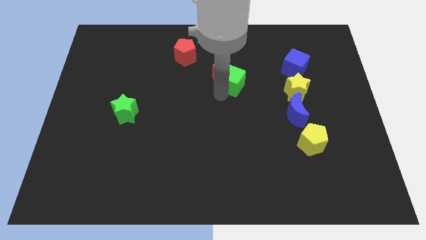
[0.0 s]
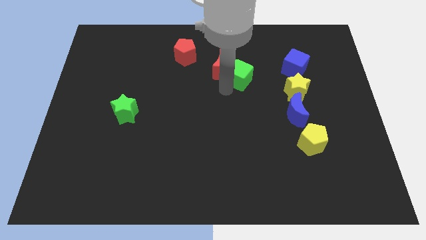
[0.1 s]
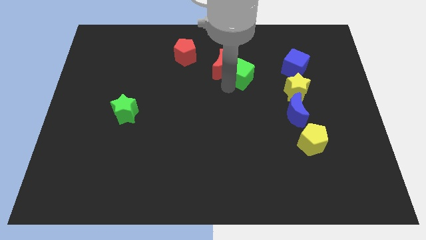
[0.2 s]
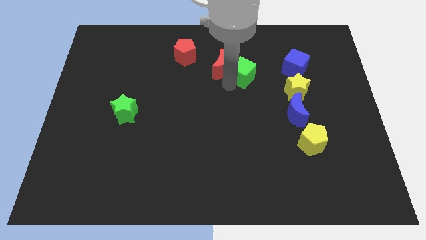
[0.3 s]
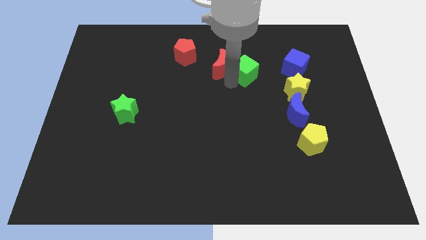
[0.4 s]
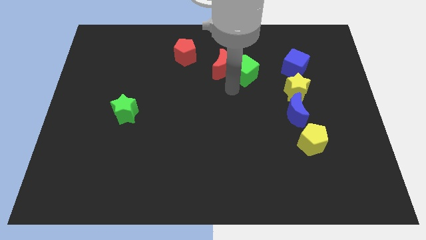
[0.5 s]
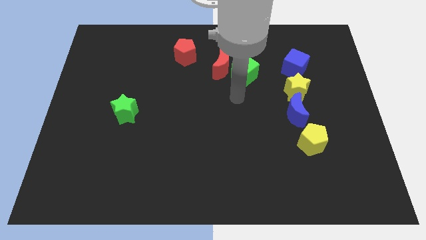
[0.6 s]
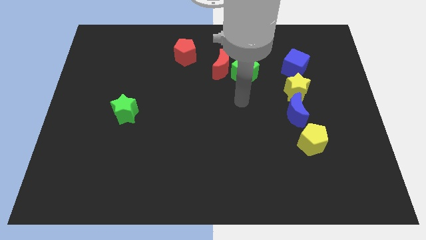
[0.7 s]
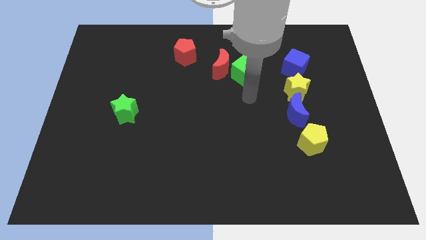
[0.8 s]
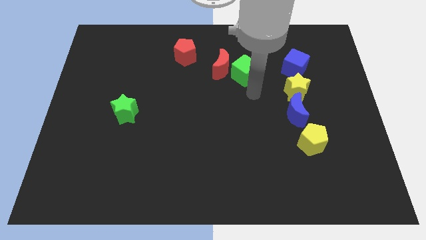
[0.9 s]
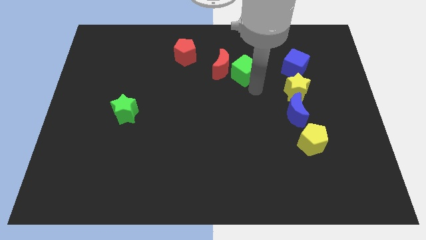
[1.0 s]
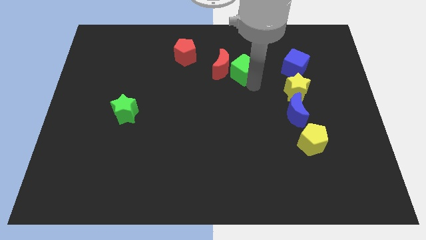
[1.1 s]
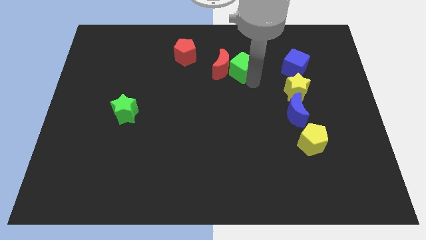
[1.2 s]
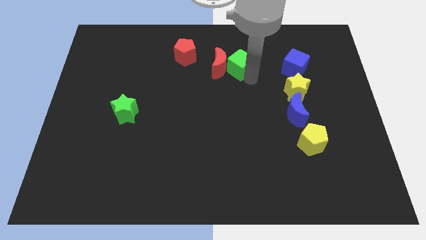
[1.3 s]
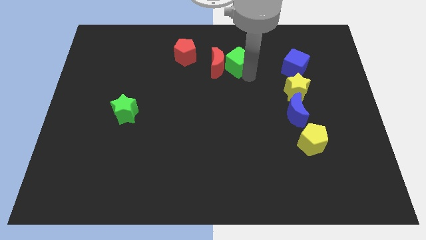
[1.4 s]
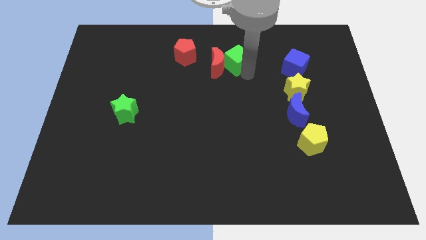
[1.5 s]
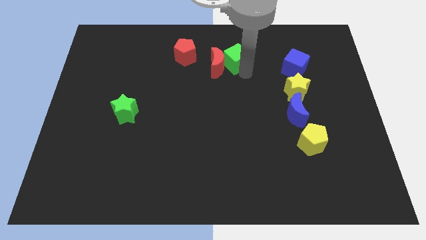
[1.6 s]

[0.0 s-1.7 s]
move green cube beside red moon

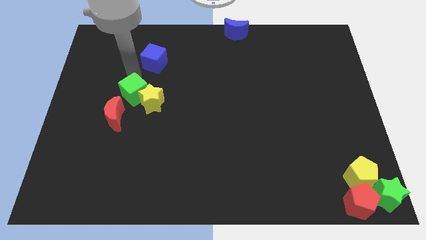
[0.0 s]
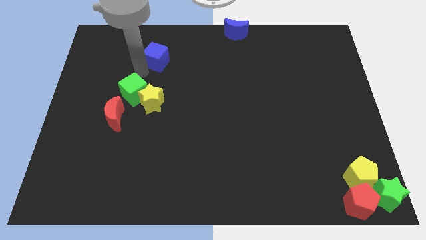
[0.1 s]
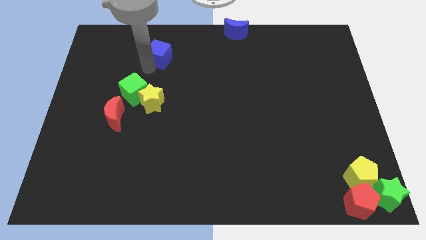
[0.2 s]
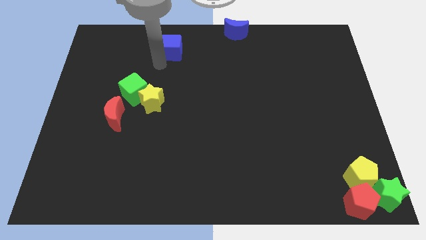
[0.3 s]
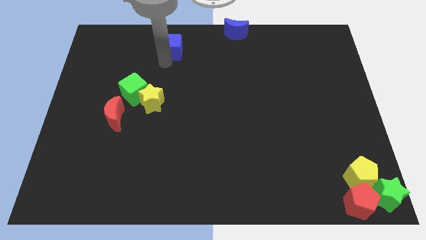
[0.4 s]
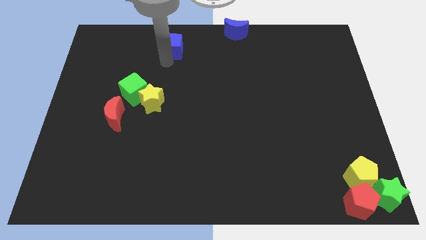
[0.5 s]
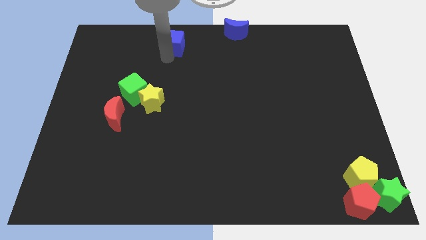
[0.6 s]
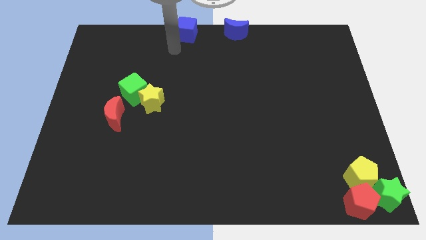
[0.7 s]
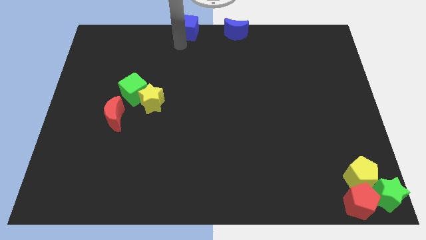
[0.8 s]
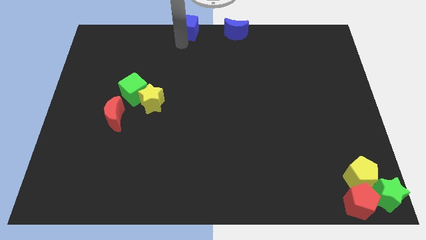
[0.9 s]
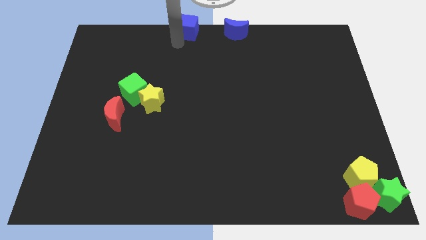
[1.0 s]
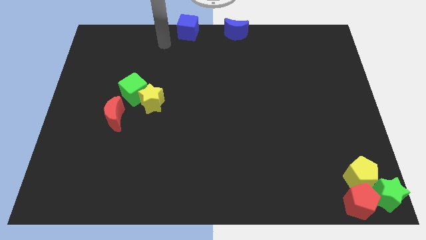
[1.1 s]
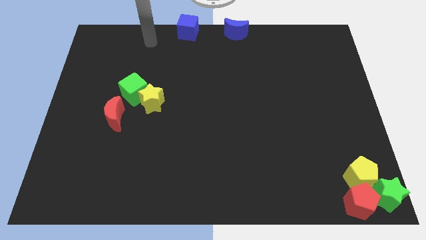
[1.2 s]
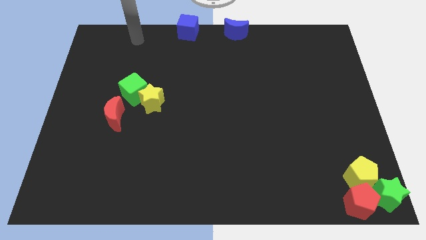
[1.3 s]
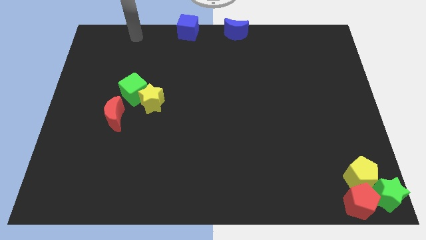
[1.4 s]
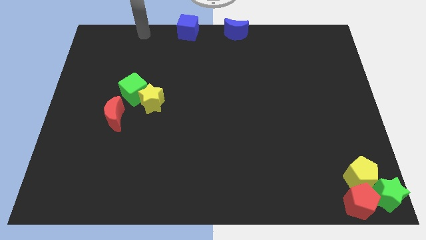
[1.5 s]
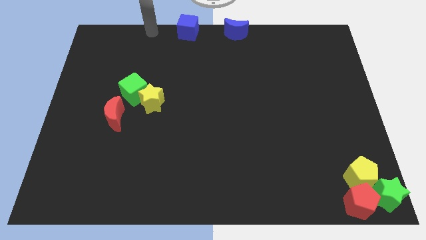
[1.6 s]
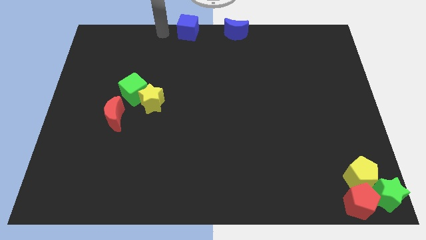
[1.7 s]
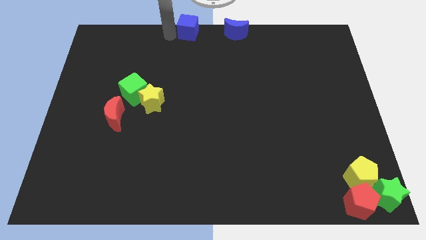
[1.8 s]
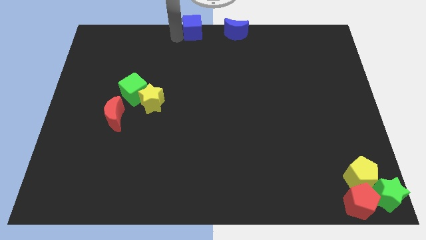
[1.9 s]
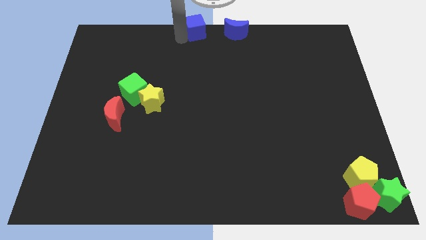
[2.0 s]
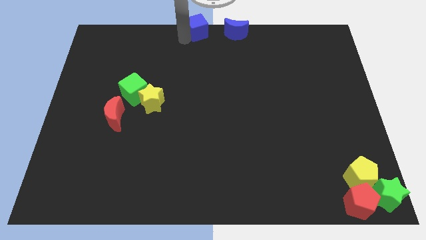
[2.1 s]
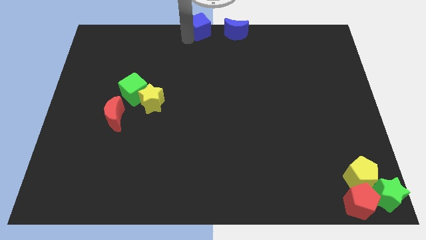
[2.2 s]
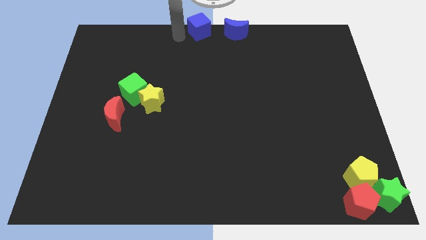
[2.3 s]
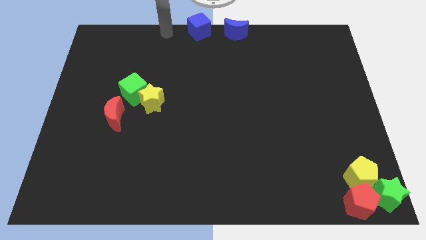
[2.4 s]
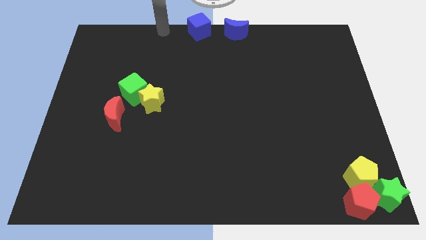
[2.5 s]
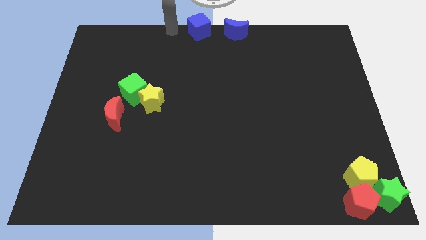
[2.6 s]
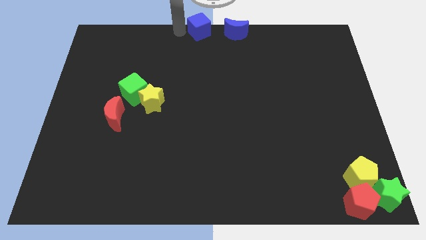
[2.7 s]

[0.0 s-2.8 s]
place the blue cube to the left side of the blue moon

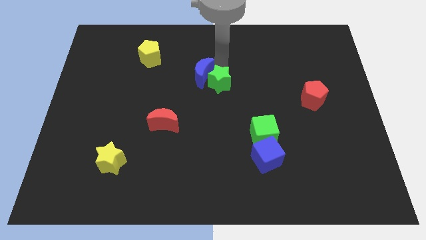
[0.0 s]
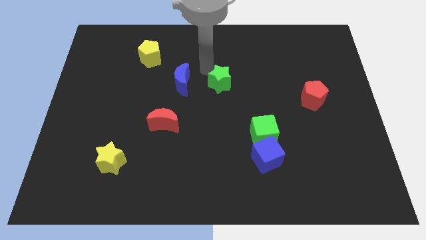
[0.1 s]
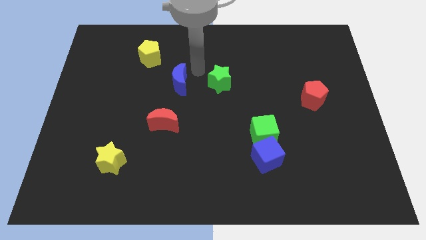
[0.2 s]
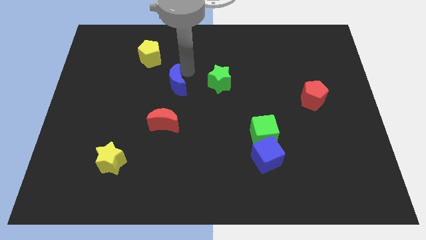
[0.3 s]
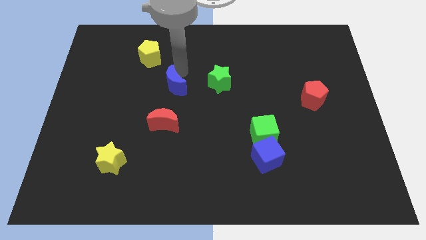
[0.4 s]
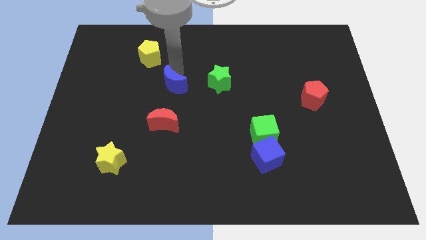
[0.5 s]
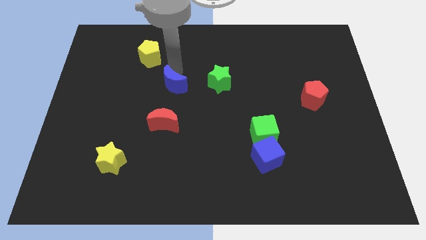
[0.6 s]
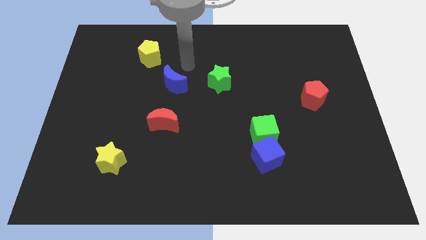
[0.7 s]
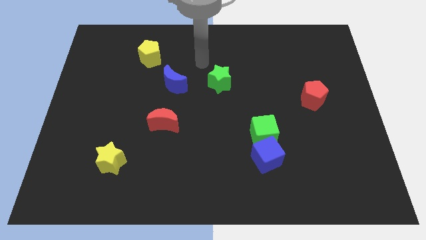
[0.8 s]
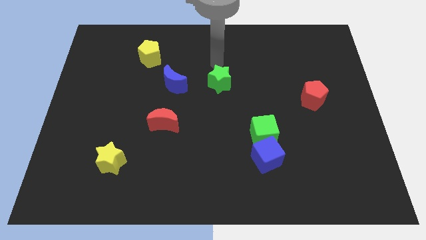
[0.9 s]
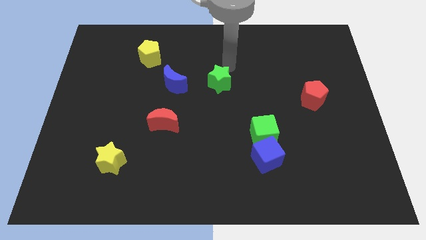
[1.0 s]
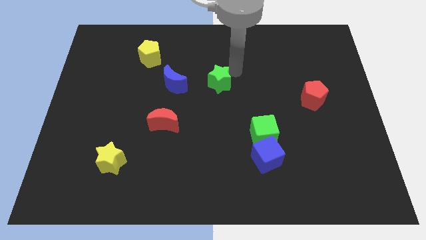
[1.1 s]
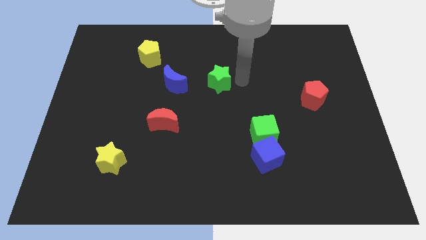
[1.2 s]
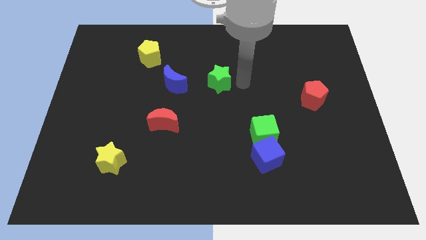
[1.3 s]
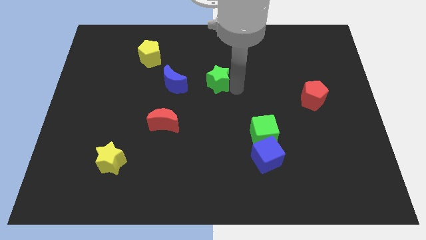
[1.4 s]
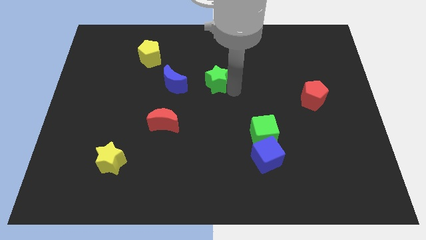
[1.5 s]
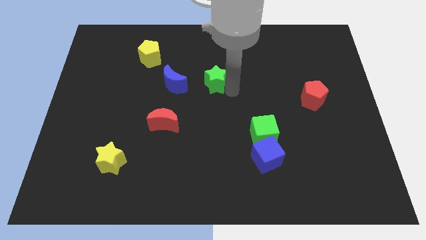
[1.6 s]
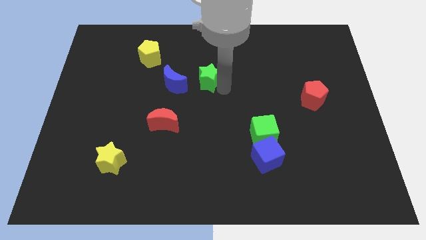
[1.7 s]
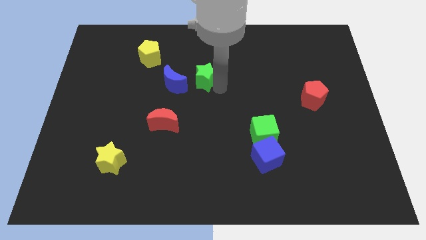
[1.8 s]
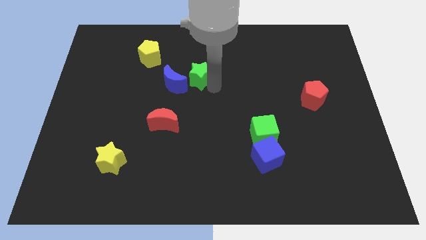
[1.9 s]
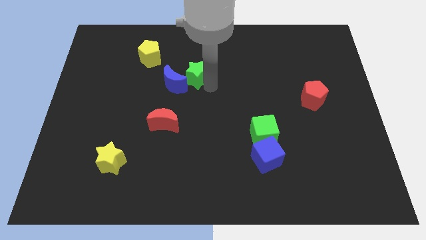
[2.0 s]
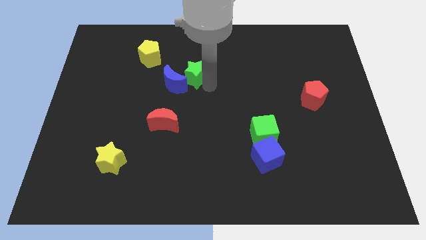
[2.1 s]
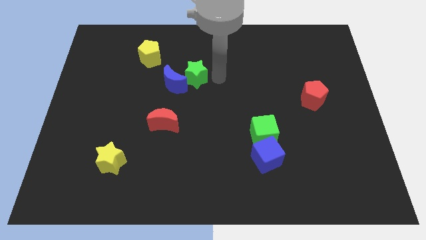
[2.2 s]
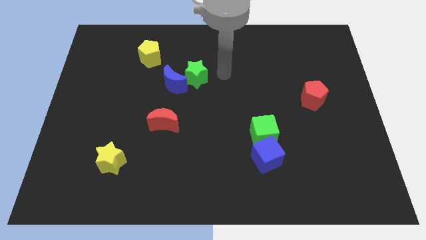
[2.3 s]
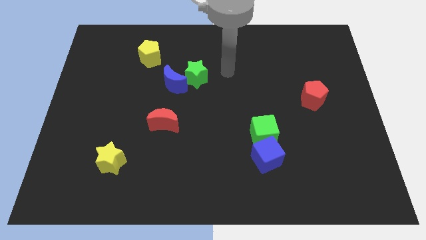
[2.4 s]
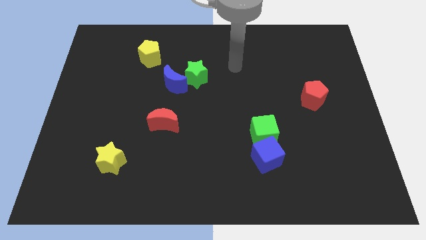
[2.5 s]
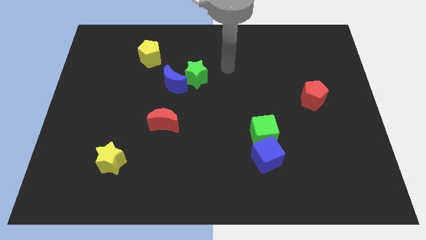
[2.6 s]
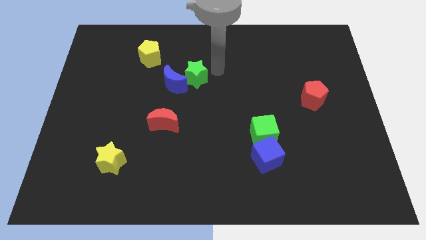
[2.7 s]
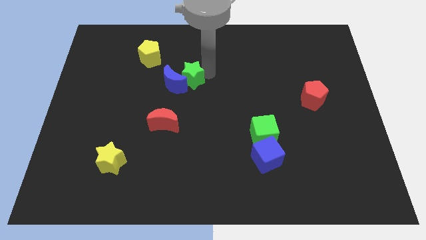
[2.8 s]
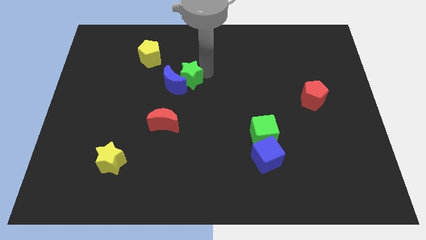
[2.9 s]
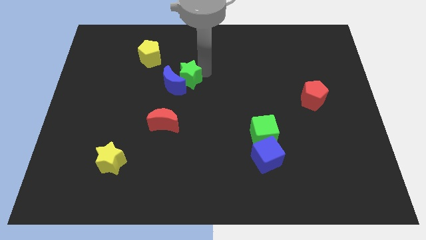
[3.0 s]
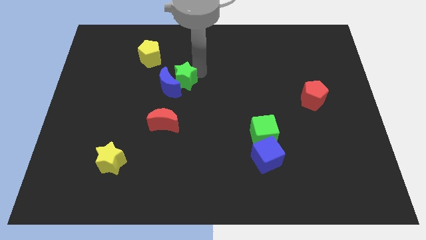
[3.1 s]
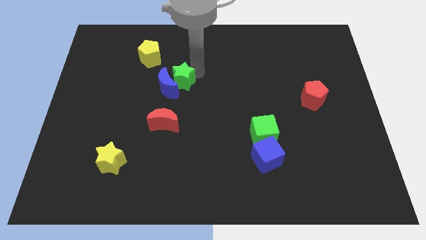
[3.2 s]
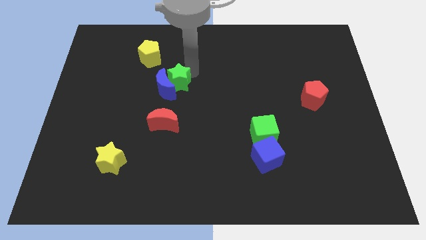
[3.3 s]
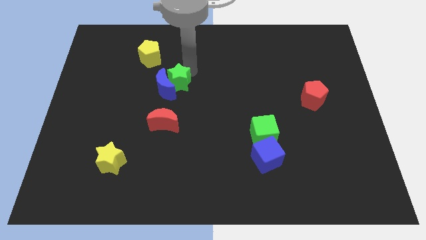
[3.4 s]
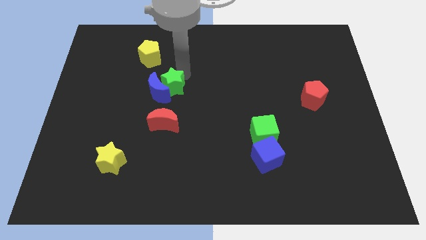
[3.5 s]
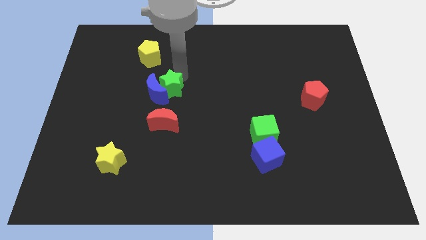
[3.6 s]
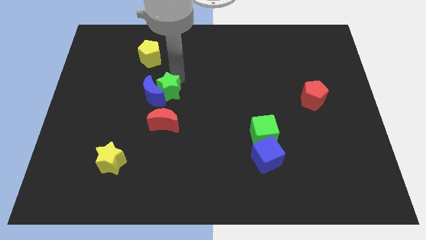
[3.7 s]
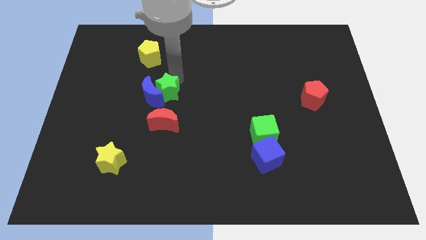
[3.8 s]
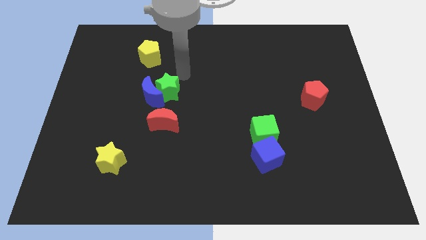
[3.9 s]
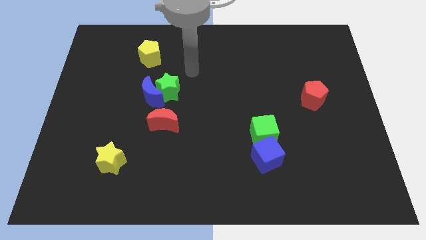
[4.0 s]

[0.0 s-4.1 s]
place the blue moon and green star at the top side of the red moon

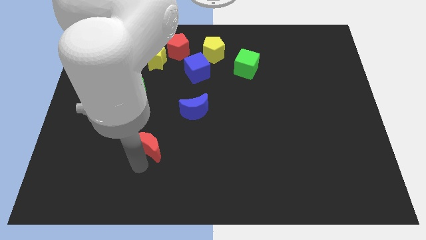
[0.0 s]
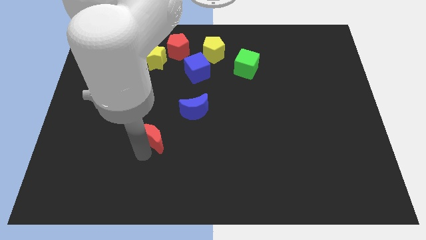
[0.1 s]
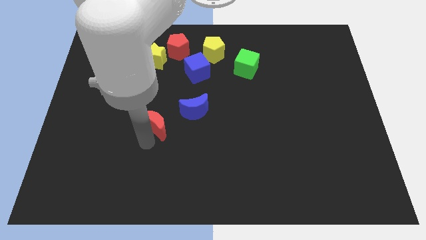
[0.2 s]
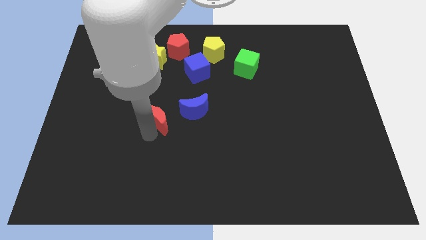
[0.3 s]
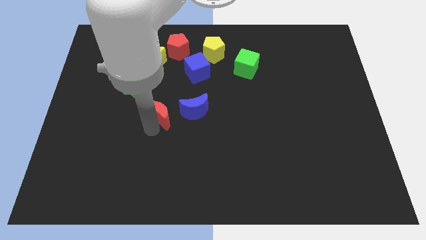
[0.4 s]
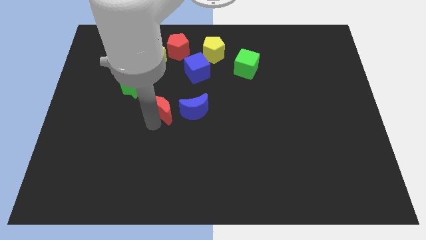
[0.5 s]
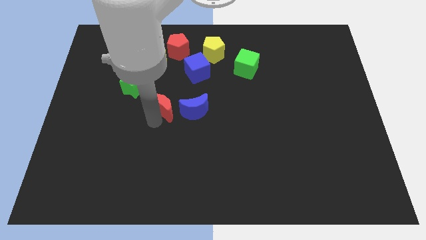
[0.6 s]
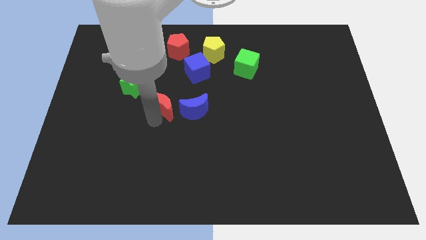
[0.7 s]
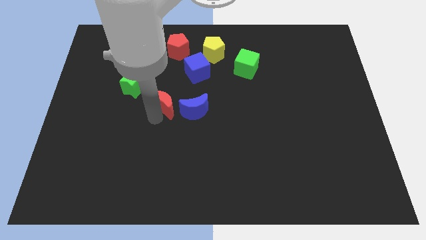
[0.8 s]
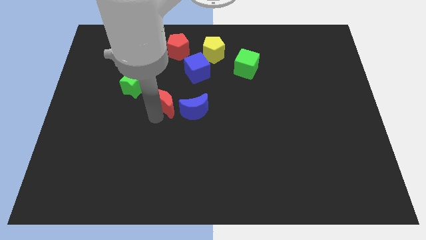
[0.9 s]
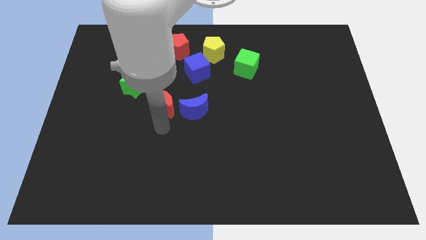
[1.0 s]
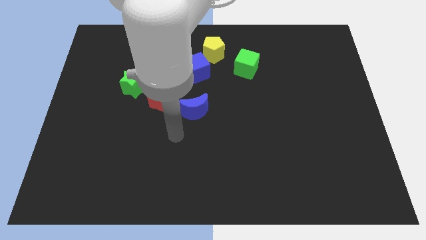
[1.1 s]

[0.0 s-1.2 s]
place red crescent beside green star
